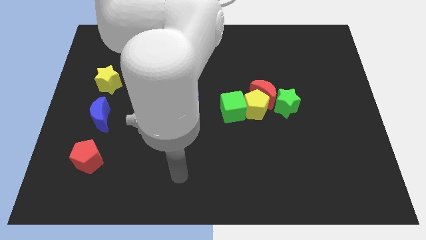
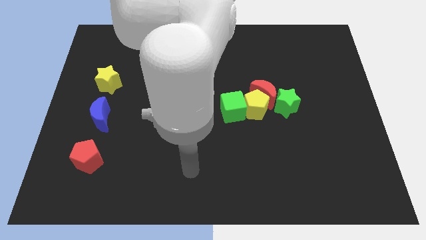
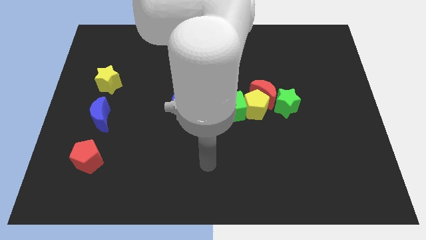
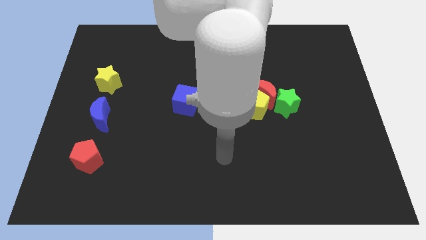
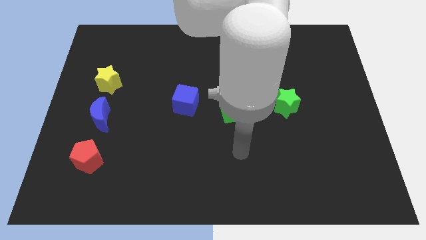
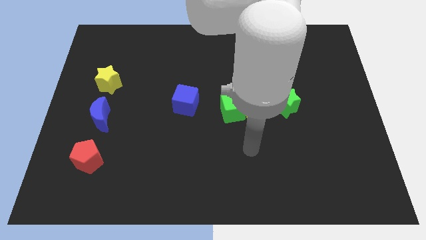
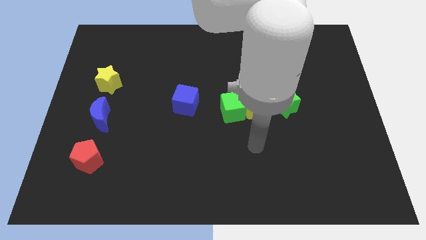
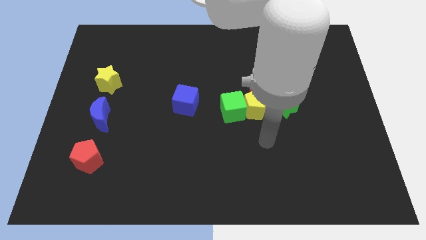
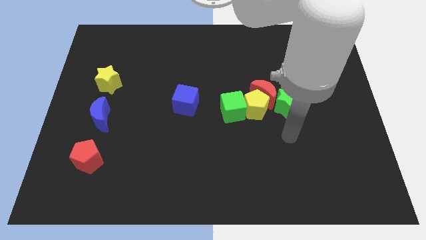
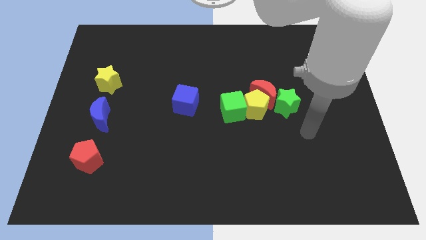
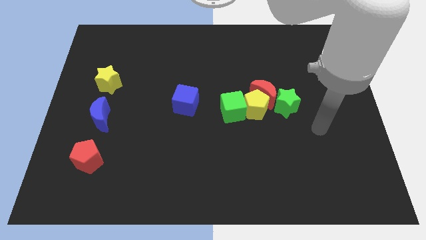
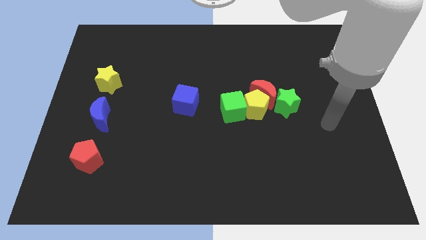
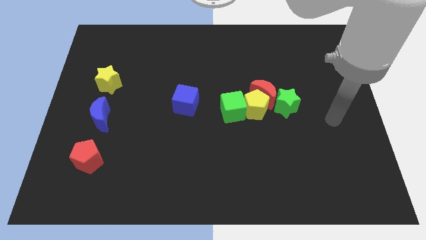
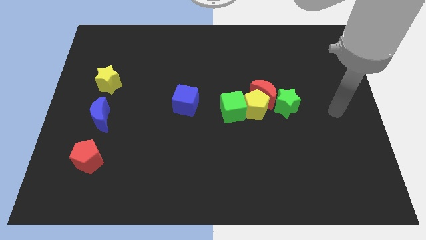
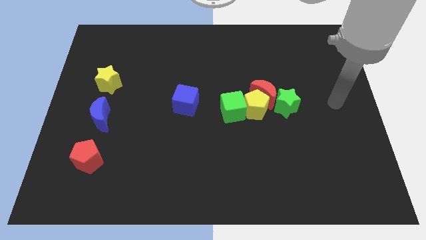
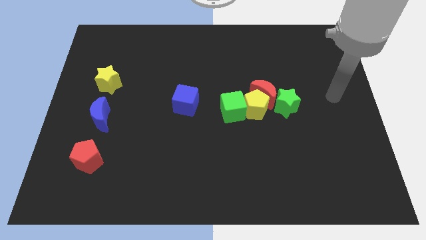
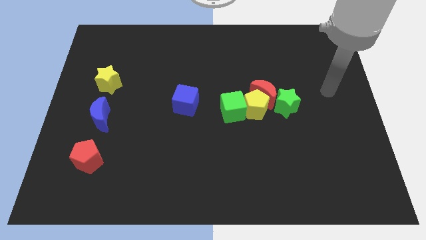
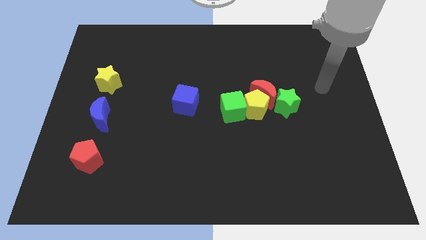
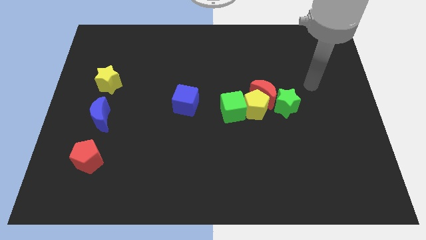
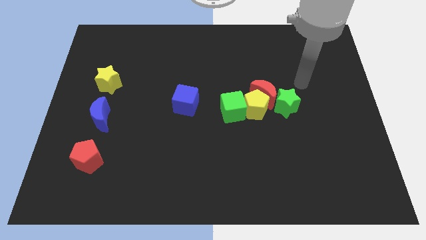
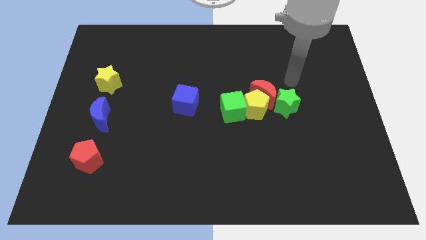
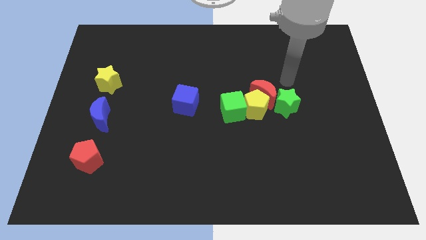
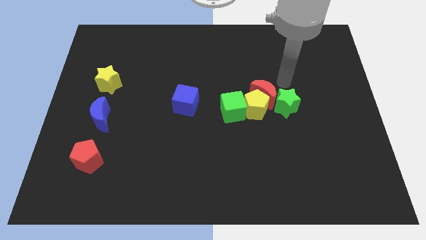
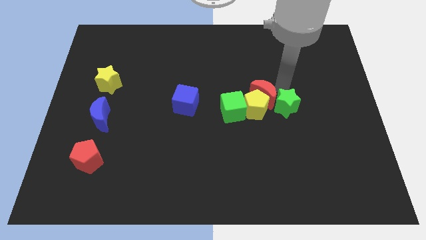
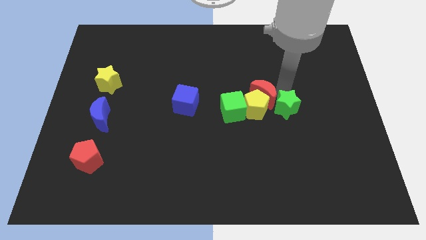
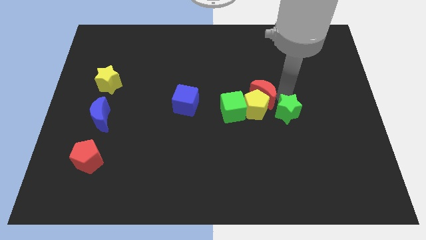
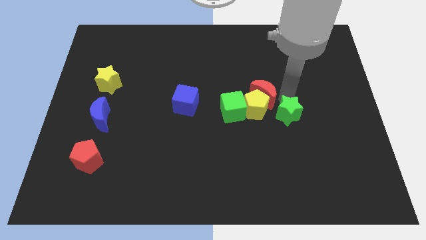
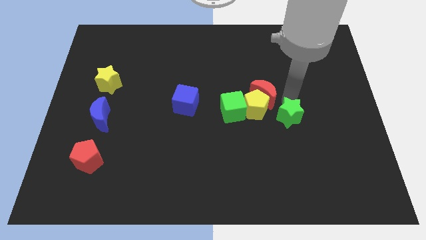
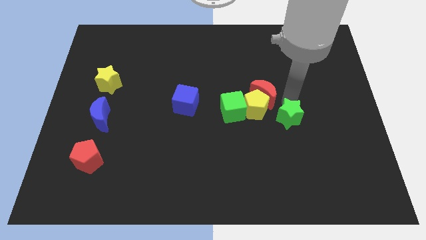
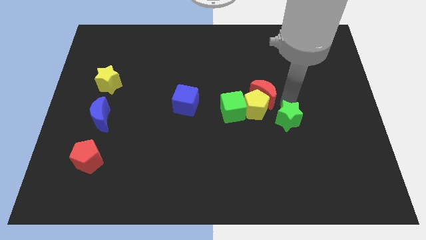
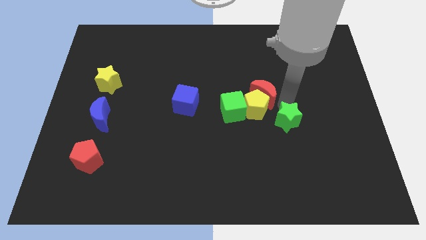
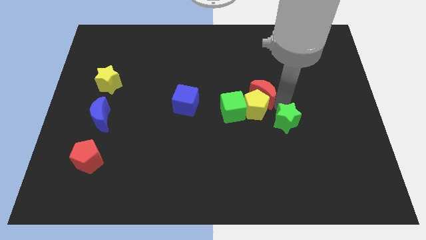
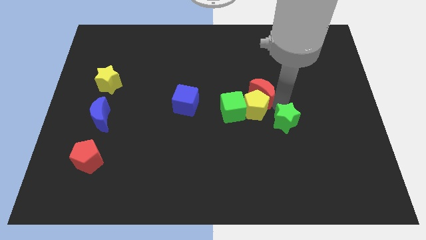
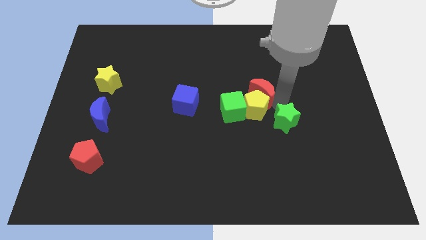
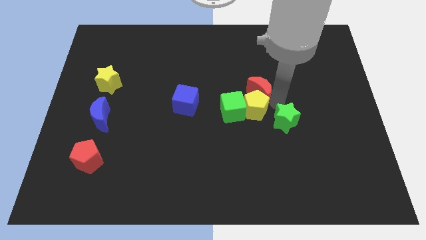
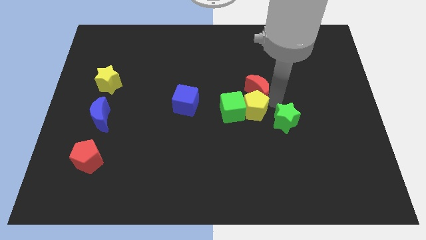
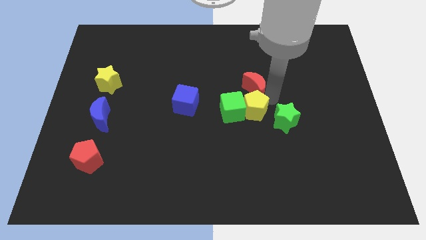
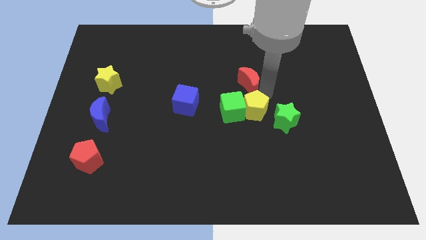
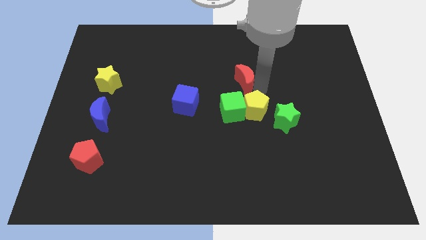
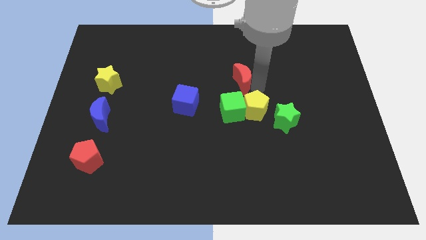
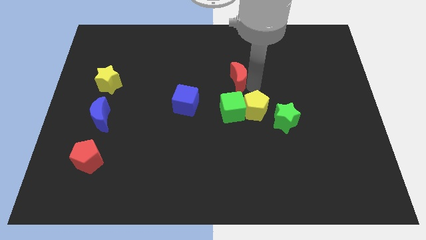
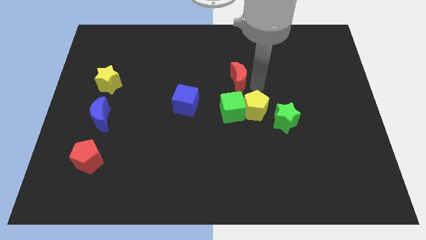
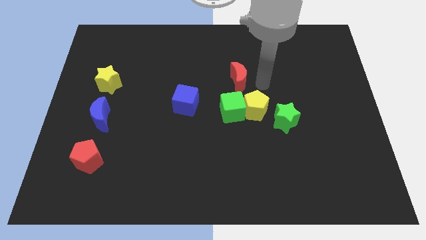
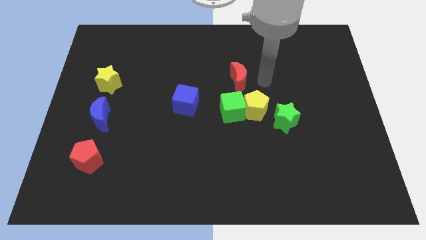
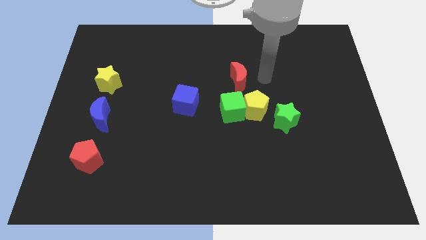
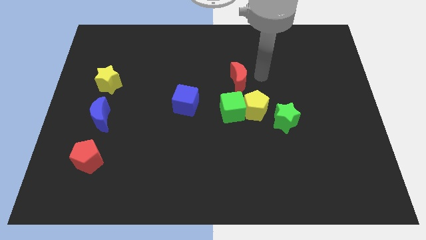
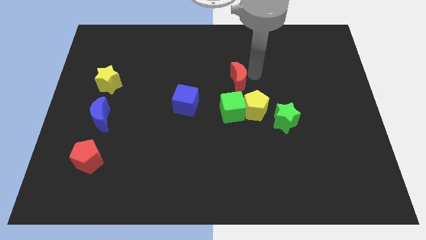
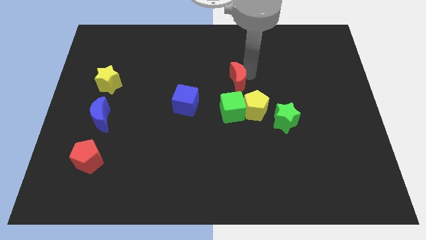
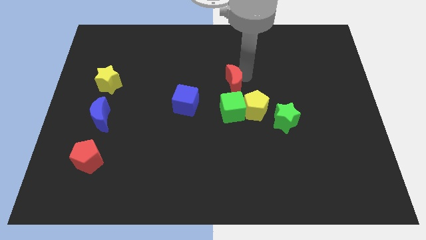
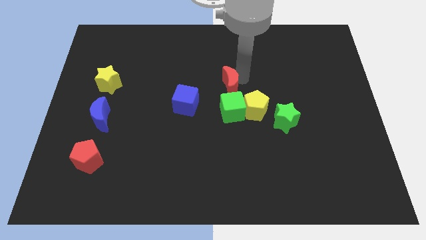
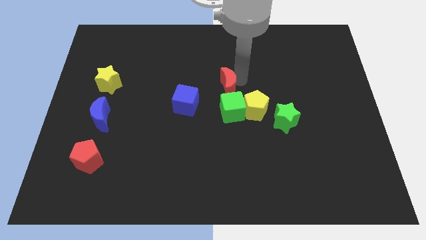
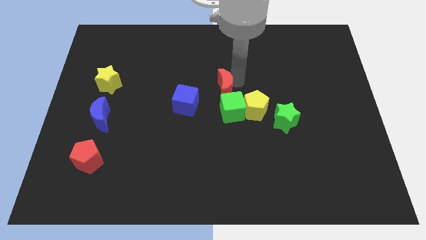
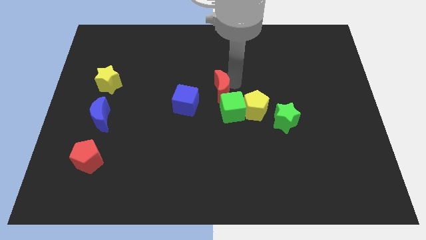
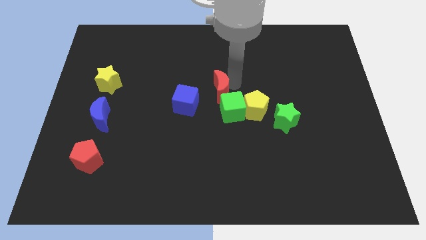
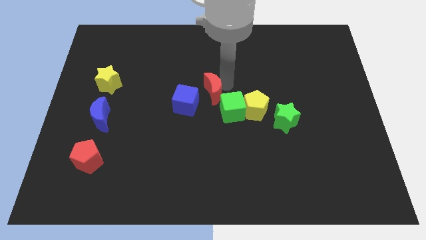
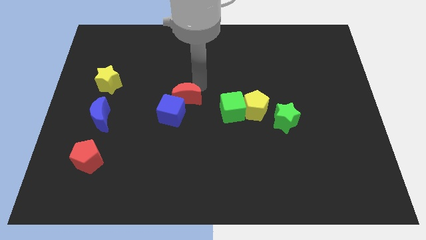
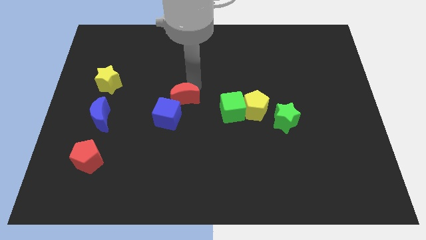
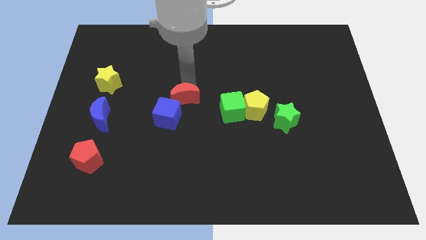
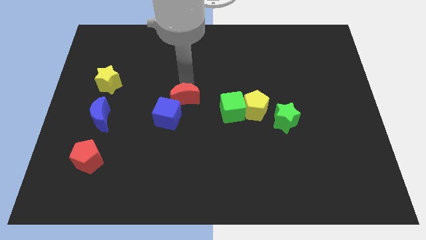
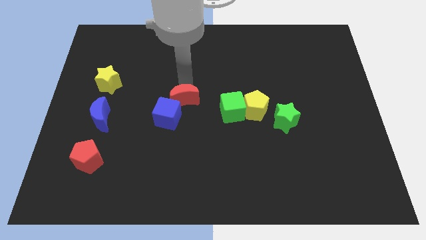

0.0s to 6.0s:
put the red moon towards the blue cube

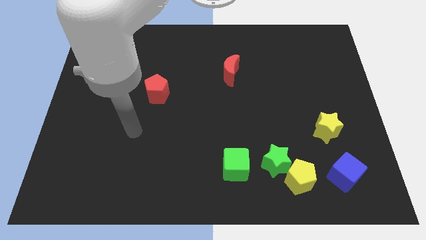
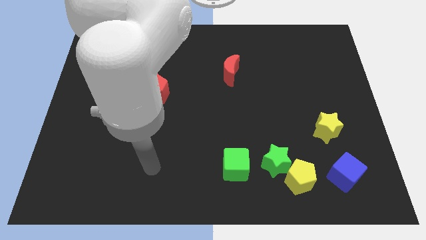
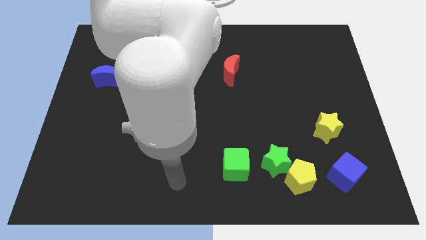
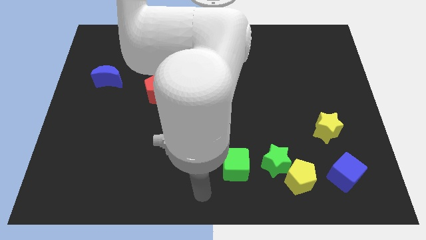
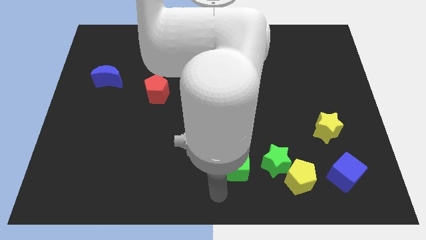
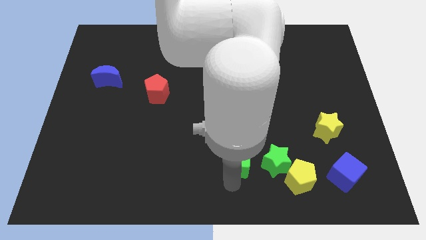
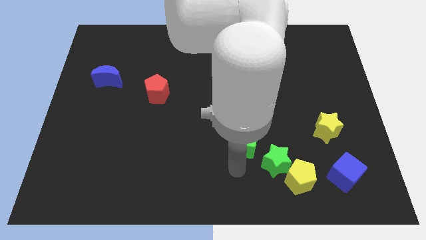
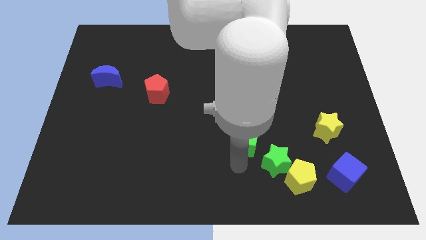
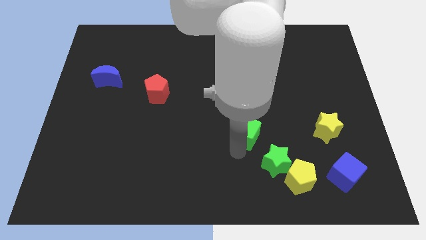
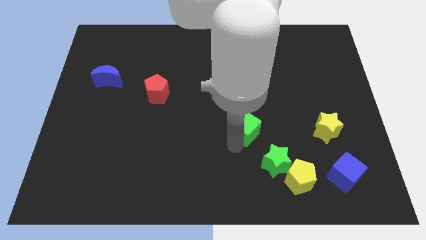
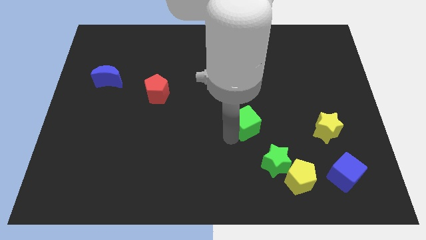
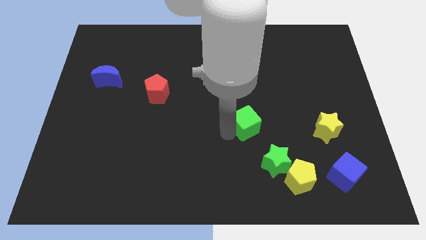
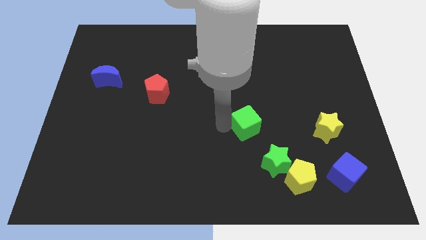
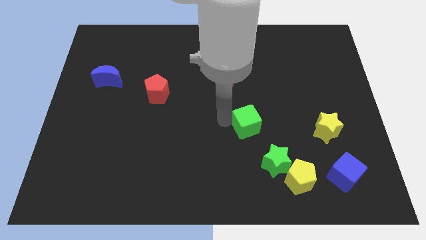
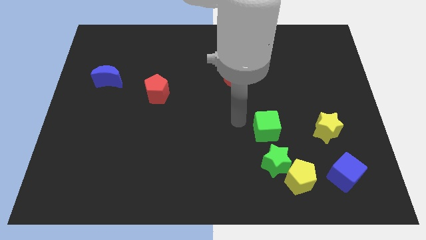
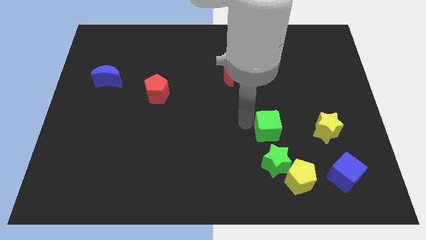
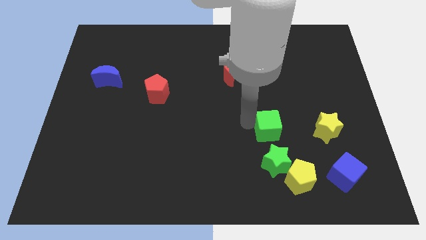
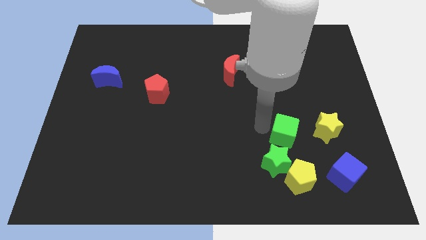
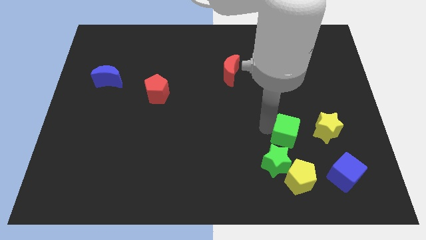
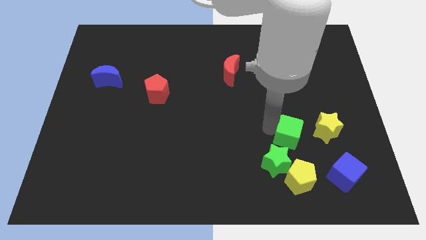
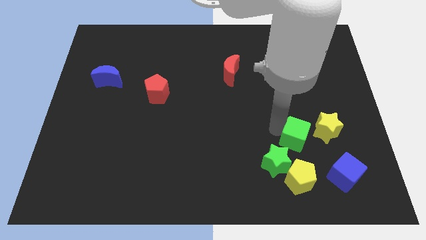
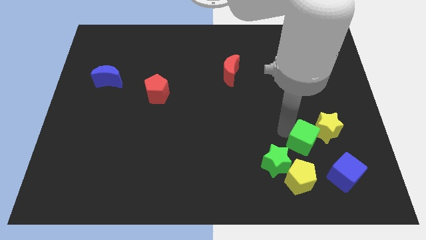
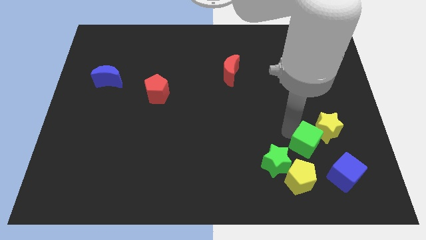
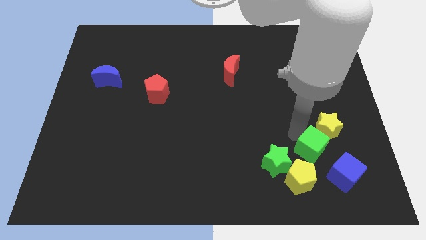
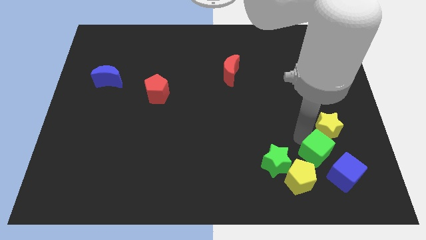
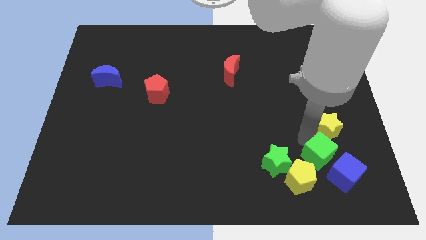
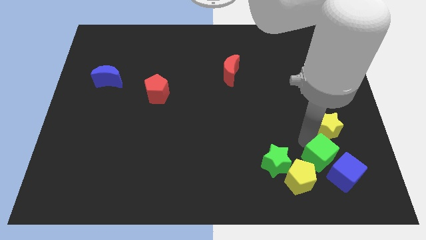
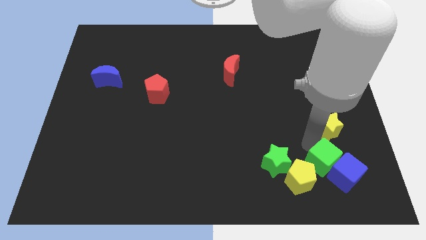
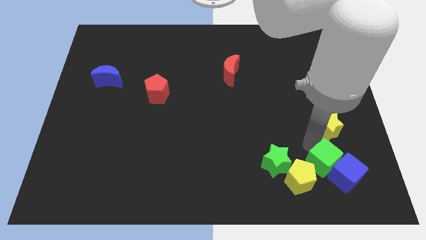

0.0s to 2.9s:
slide the green cube to the blue cube
